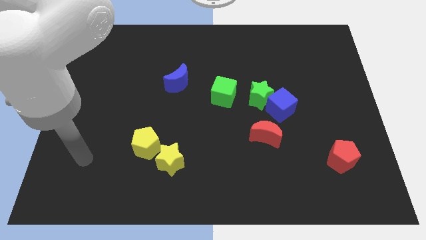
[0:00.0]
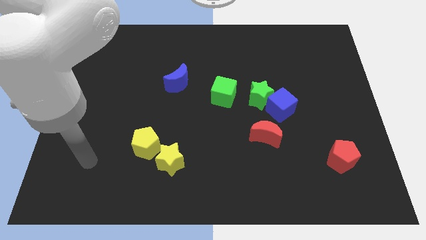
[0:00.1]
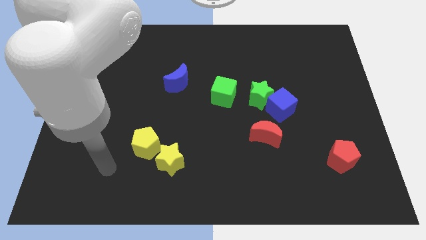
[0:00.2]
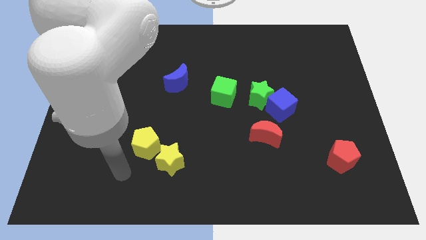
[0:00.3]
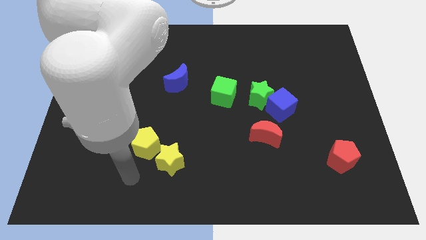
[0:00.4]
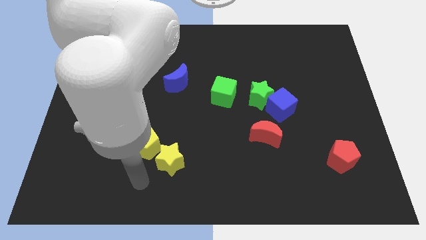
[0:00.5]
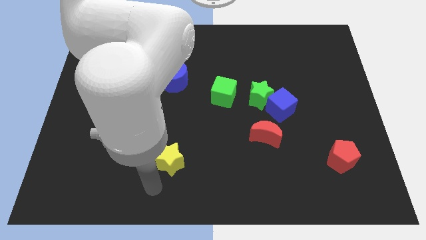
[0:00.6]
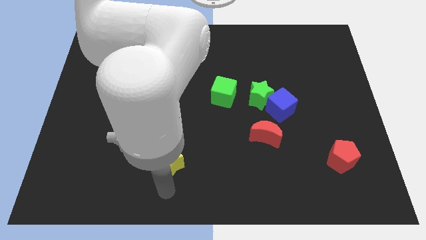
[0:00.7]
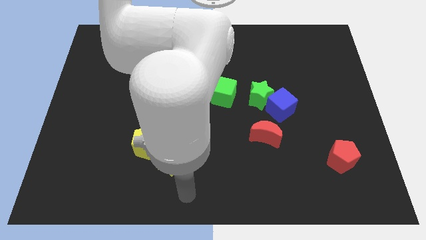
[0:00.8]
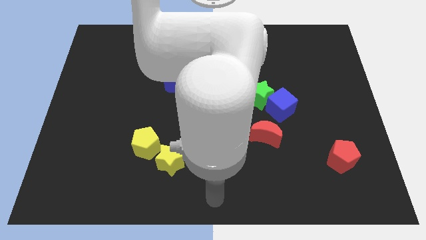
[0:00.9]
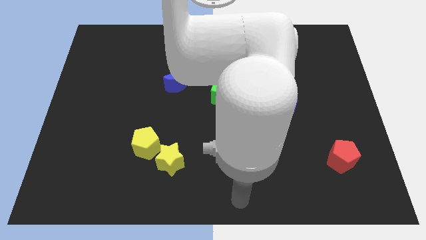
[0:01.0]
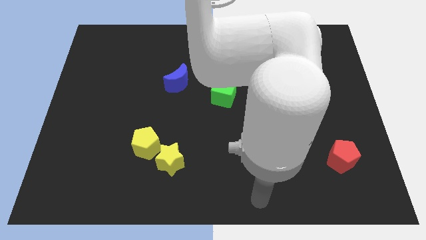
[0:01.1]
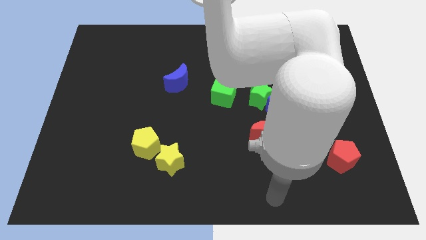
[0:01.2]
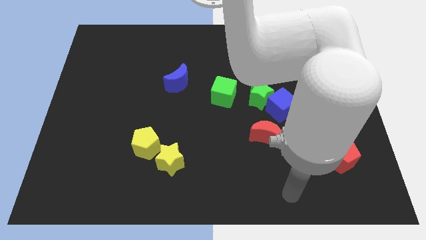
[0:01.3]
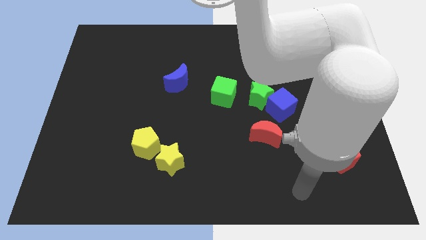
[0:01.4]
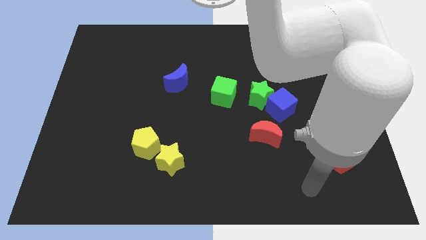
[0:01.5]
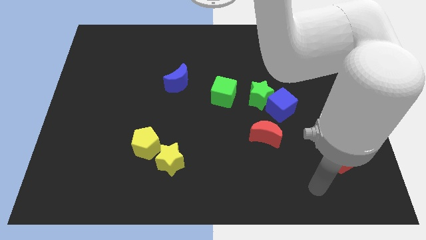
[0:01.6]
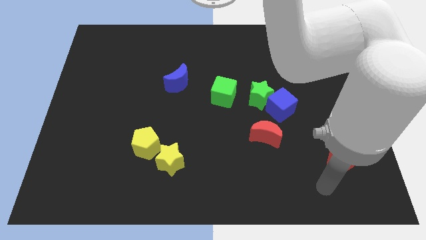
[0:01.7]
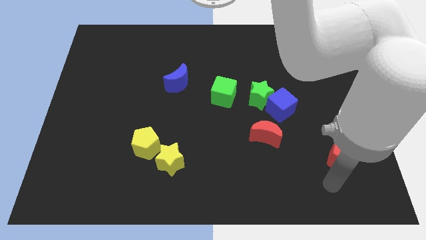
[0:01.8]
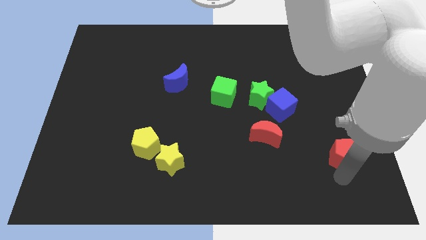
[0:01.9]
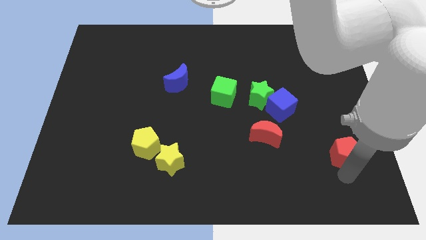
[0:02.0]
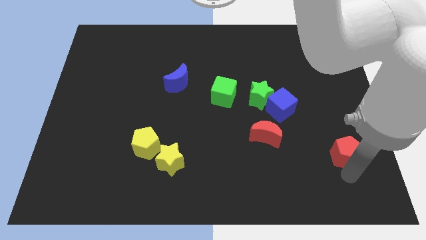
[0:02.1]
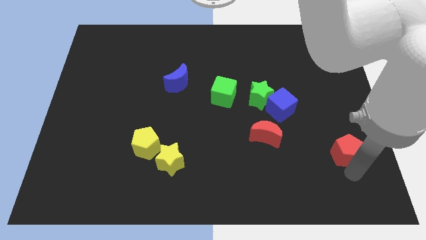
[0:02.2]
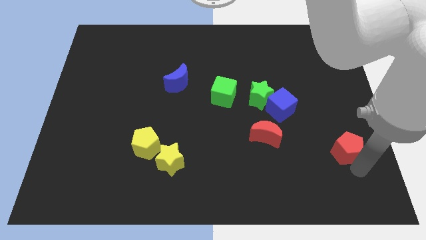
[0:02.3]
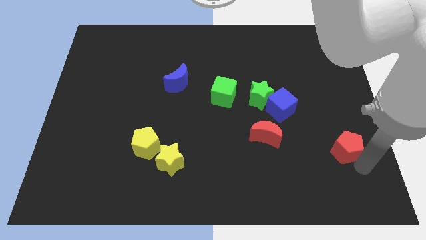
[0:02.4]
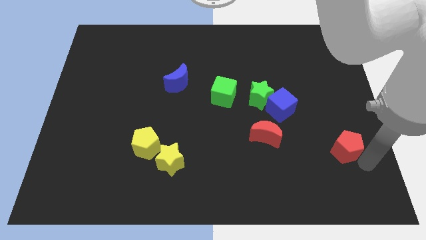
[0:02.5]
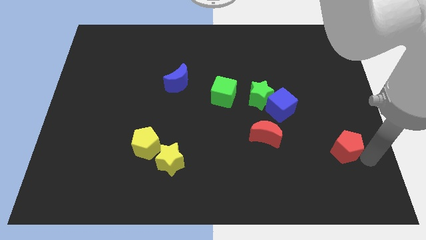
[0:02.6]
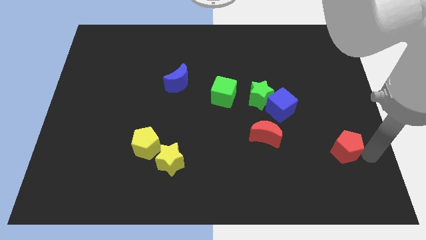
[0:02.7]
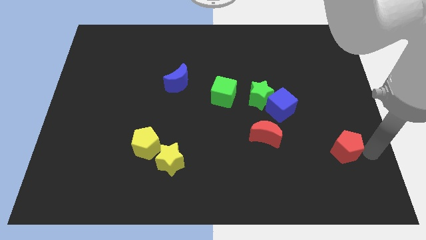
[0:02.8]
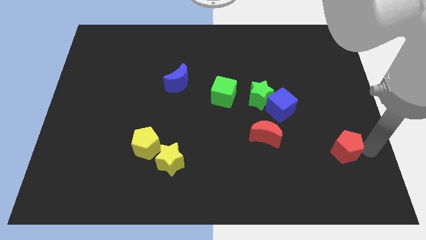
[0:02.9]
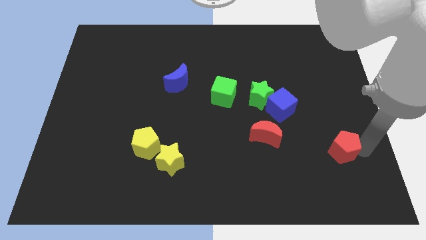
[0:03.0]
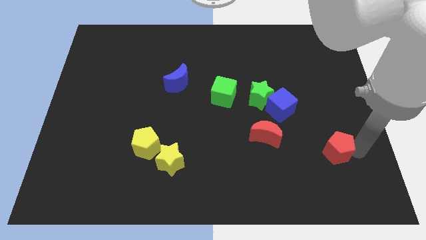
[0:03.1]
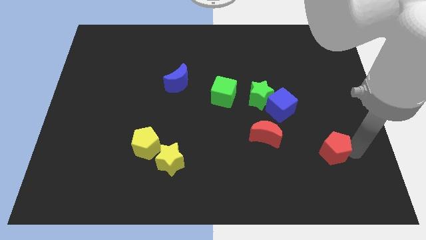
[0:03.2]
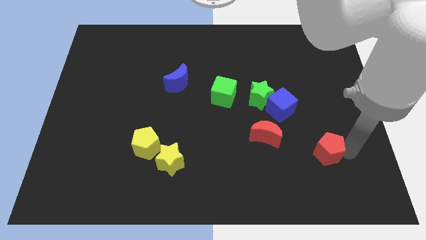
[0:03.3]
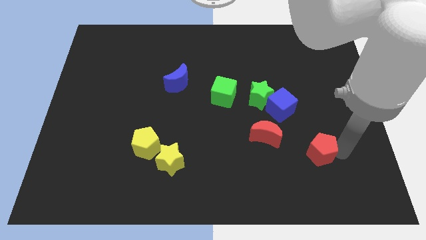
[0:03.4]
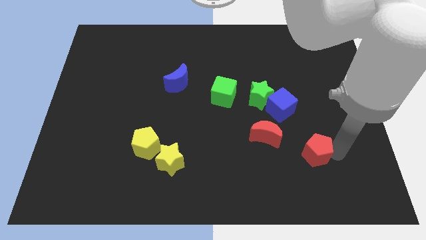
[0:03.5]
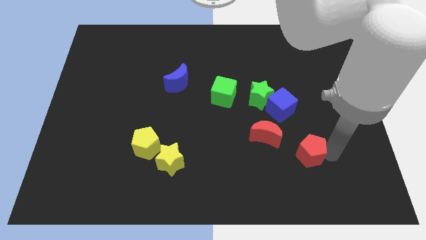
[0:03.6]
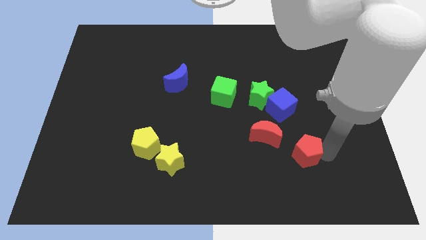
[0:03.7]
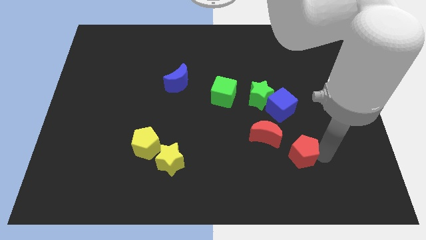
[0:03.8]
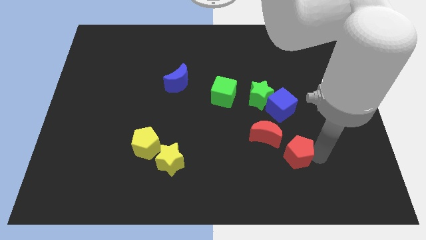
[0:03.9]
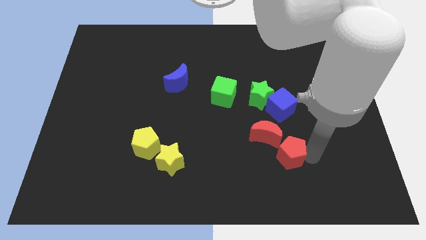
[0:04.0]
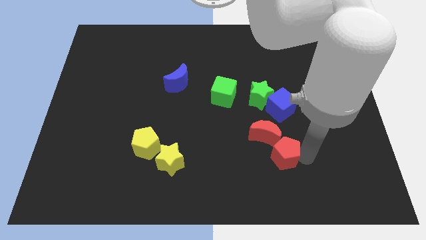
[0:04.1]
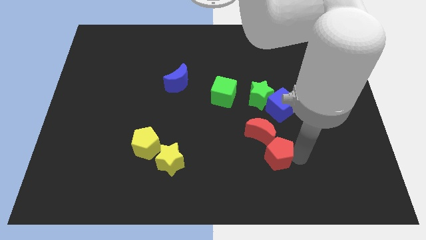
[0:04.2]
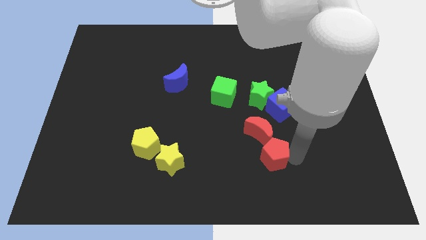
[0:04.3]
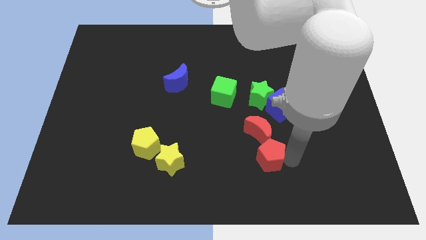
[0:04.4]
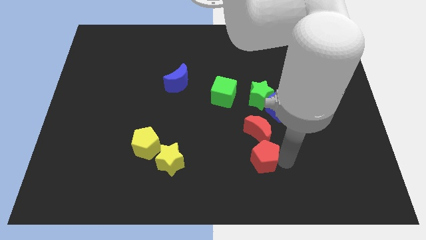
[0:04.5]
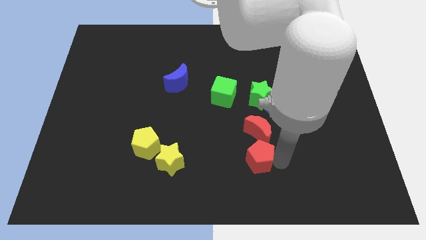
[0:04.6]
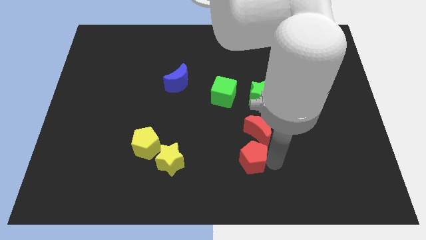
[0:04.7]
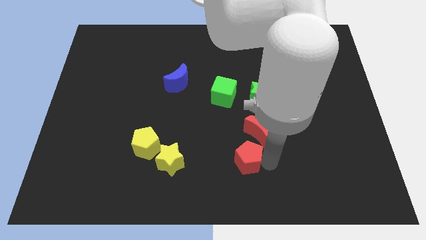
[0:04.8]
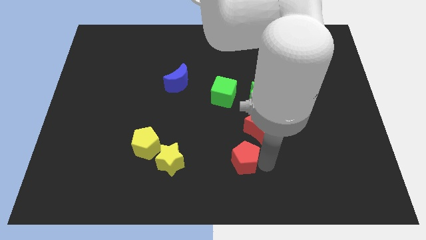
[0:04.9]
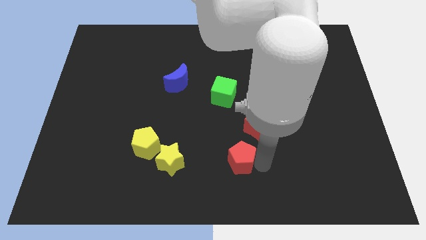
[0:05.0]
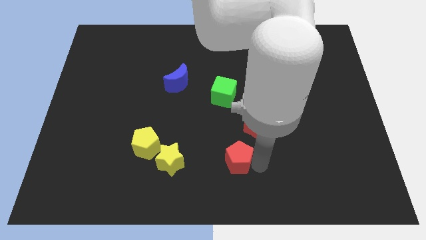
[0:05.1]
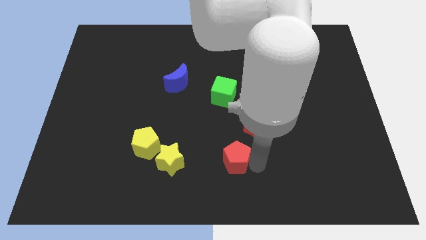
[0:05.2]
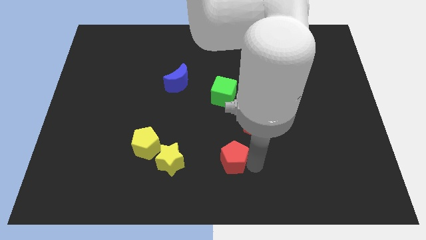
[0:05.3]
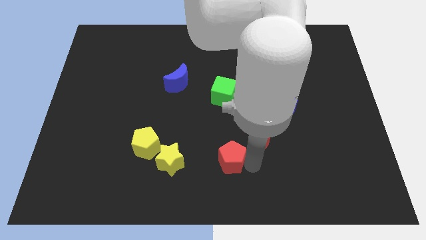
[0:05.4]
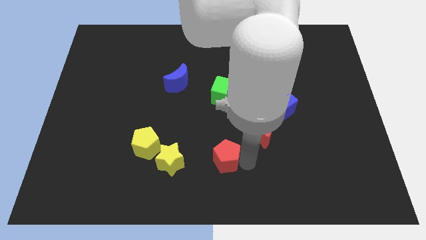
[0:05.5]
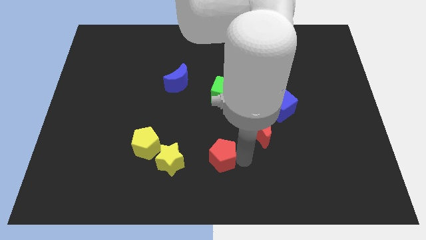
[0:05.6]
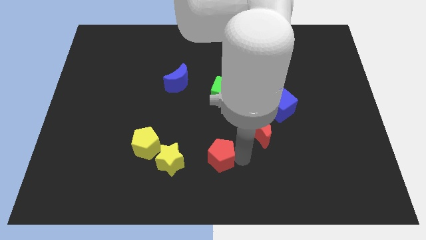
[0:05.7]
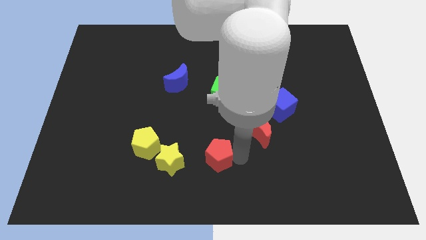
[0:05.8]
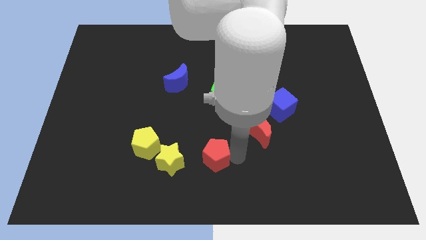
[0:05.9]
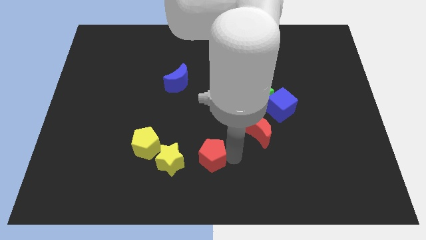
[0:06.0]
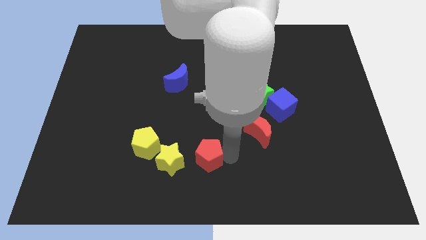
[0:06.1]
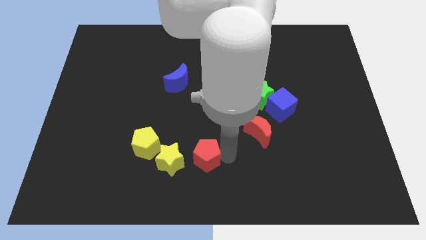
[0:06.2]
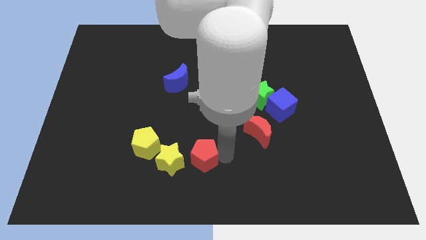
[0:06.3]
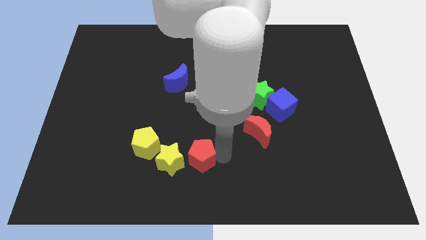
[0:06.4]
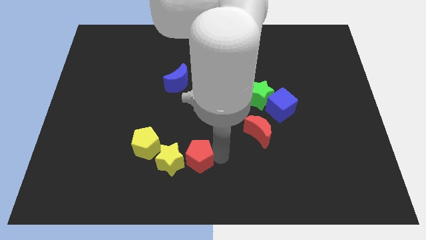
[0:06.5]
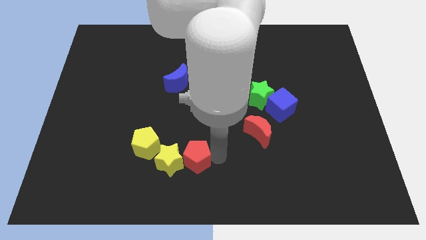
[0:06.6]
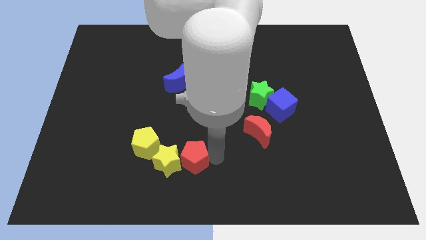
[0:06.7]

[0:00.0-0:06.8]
move the red pentagon next to the yellow star

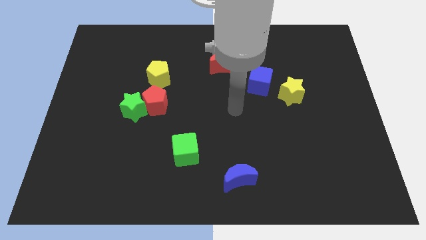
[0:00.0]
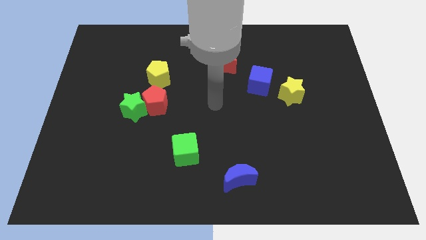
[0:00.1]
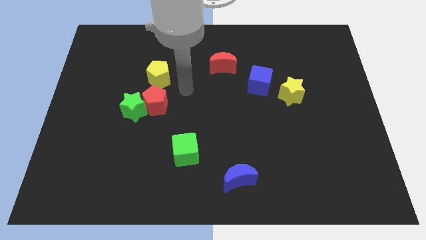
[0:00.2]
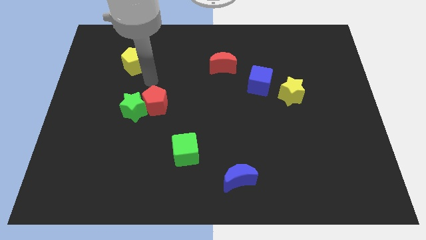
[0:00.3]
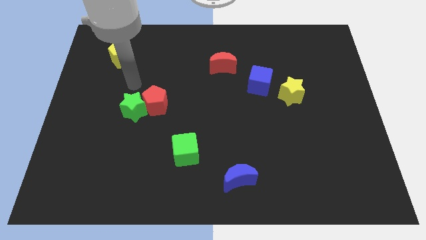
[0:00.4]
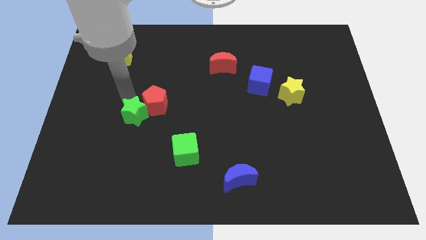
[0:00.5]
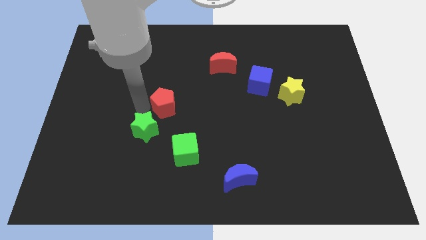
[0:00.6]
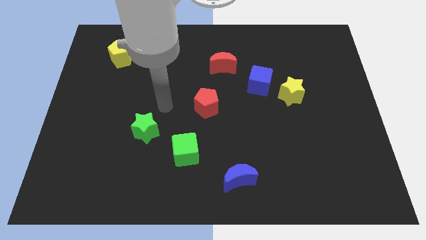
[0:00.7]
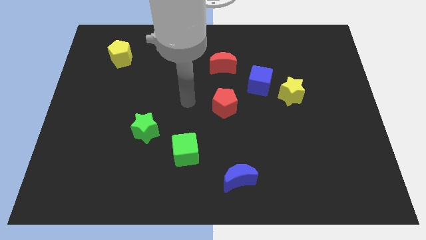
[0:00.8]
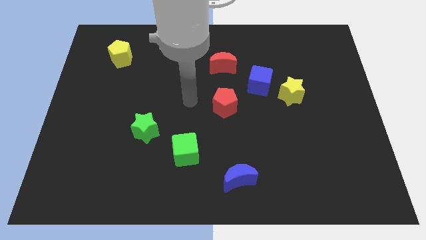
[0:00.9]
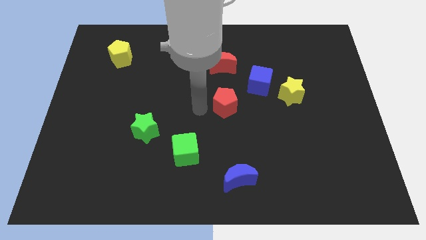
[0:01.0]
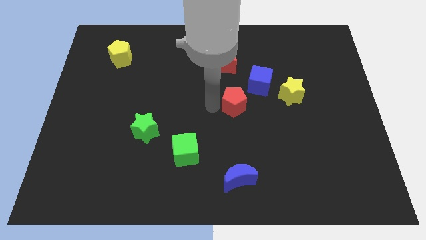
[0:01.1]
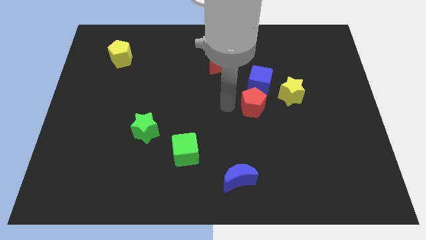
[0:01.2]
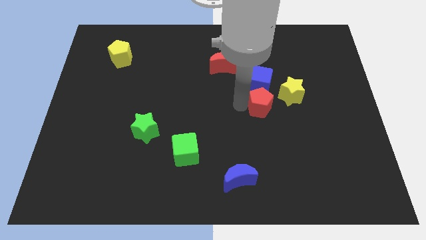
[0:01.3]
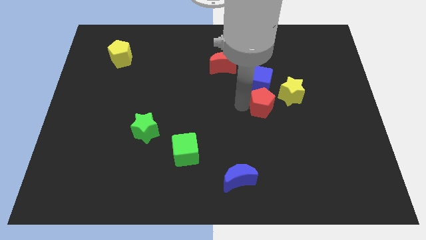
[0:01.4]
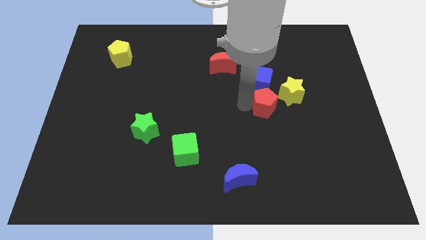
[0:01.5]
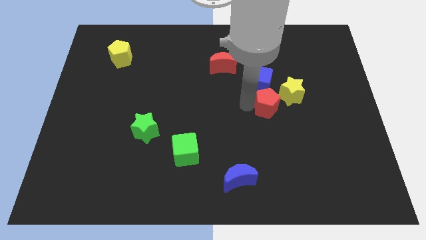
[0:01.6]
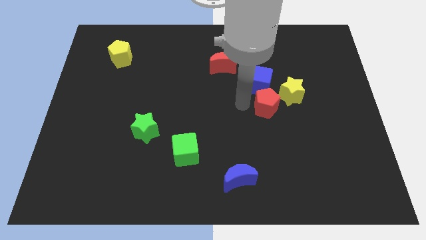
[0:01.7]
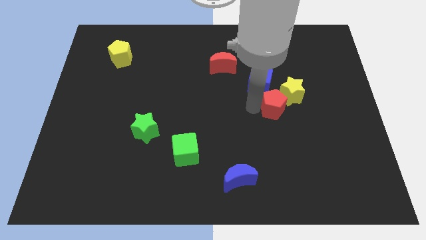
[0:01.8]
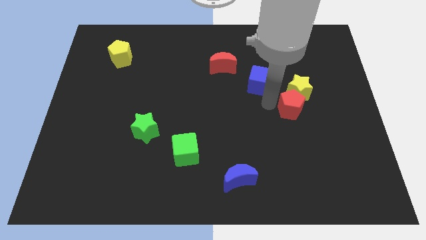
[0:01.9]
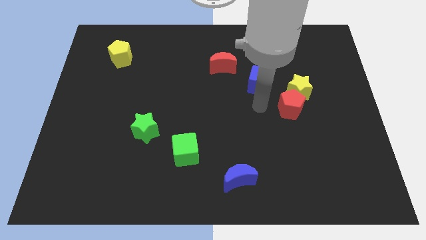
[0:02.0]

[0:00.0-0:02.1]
put the red pentagon to the yellow star
